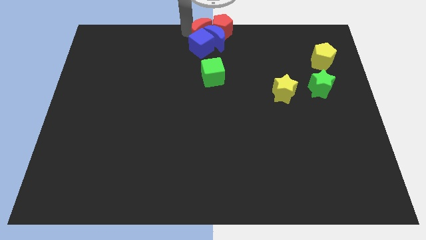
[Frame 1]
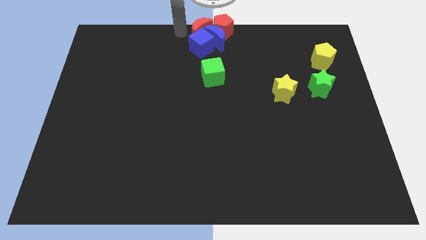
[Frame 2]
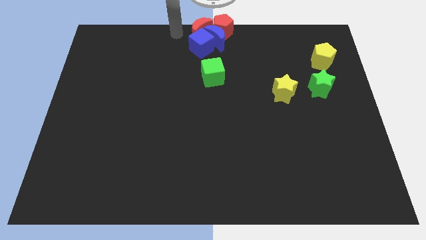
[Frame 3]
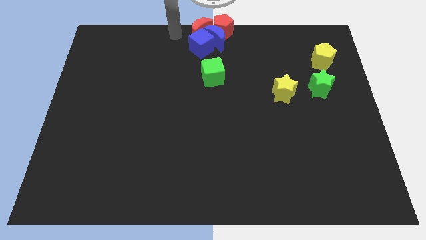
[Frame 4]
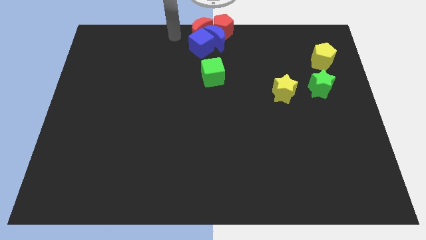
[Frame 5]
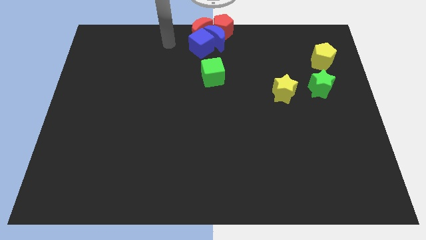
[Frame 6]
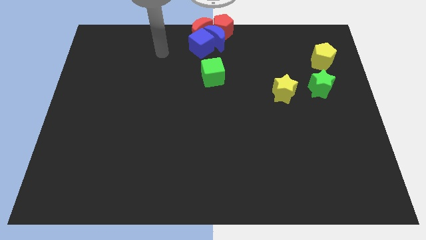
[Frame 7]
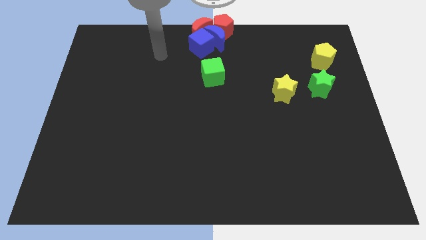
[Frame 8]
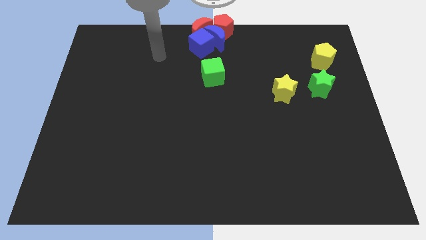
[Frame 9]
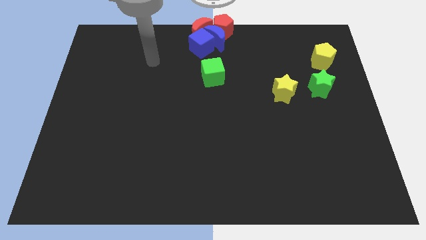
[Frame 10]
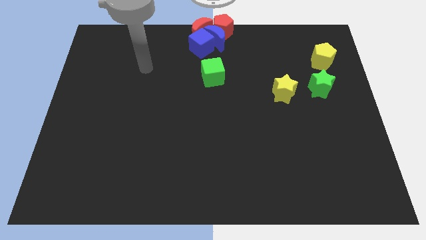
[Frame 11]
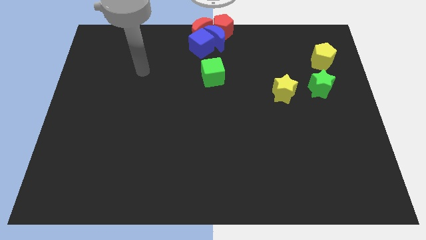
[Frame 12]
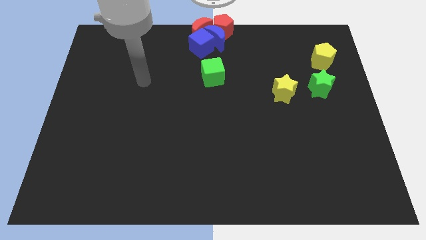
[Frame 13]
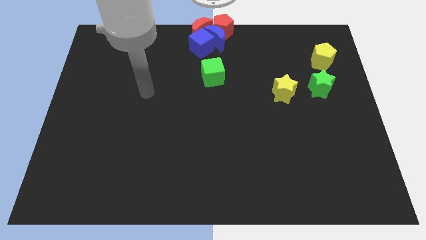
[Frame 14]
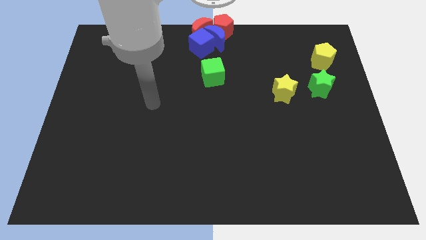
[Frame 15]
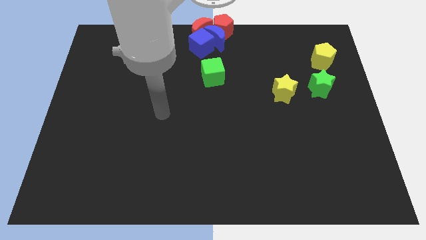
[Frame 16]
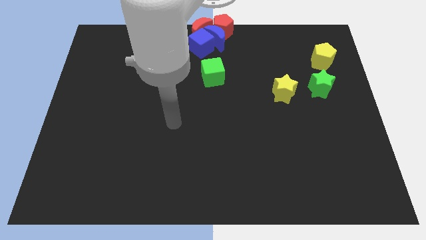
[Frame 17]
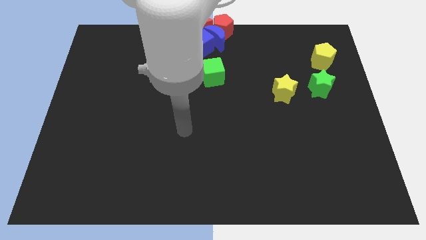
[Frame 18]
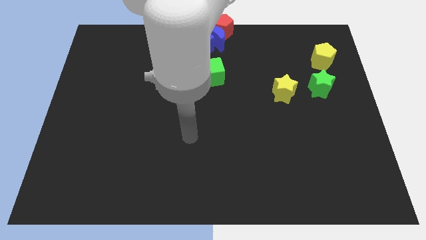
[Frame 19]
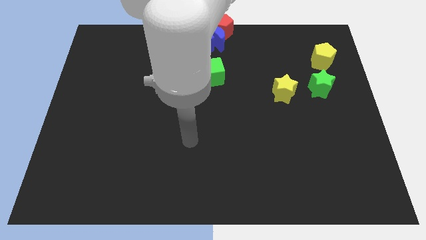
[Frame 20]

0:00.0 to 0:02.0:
move your arm to the center of the board

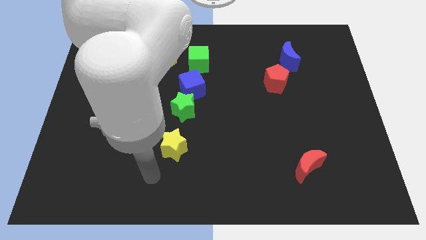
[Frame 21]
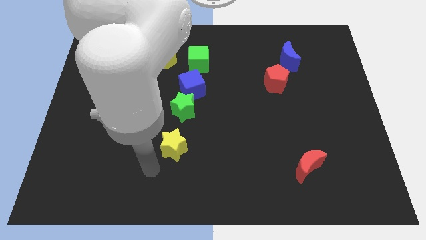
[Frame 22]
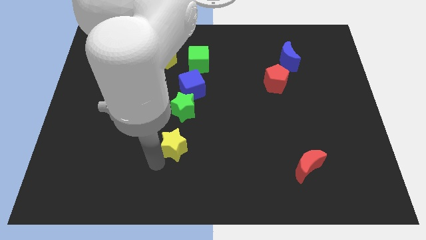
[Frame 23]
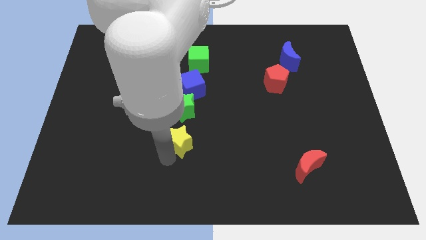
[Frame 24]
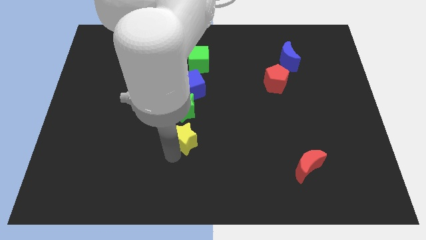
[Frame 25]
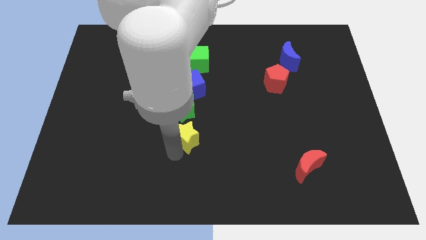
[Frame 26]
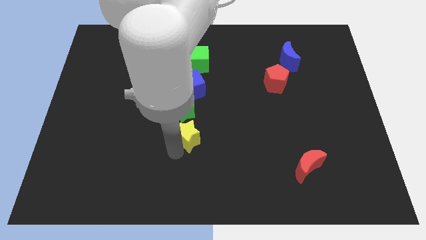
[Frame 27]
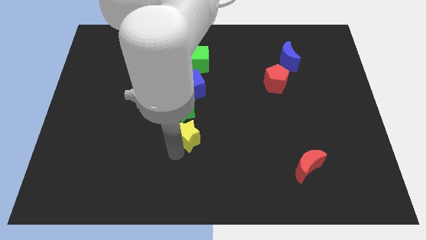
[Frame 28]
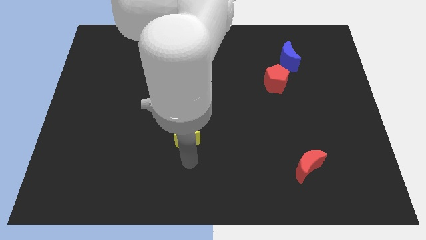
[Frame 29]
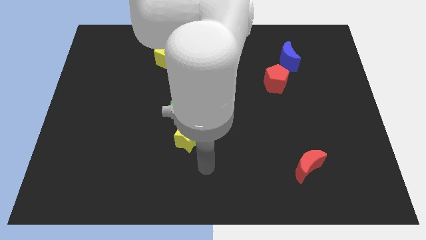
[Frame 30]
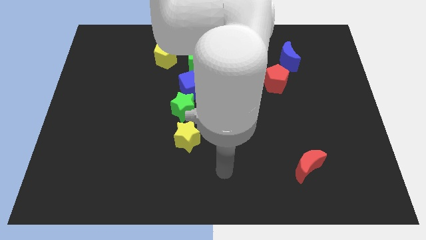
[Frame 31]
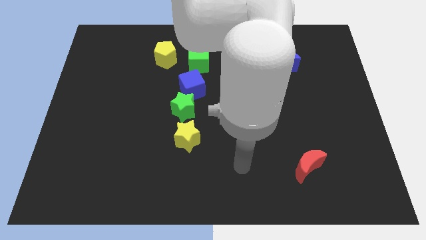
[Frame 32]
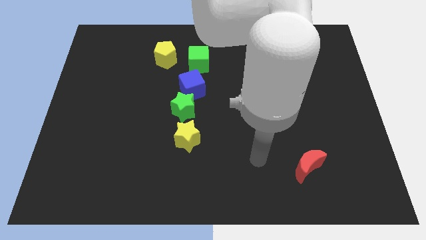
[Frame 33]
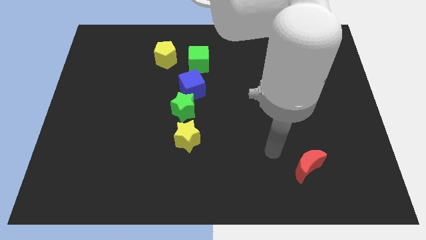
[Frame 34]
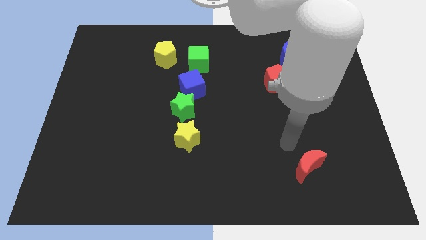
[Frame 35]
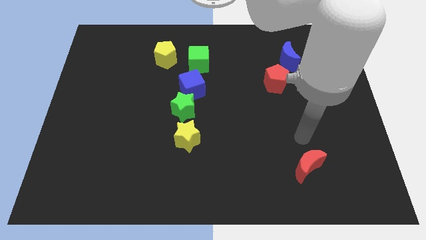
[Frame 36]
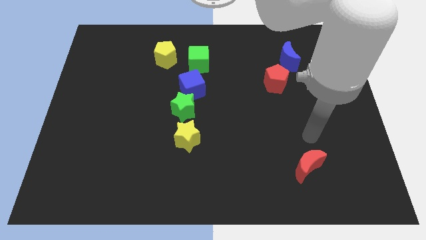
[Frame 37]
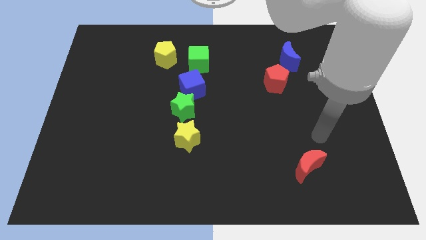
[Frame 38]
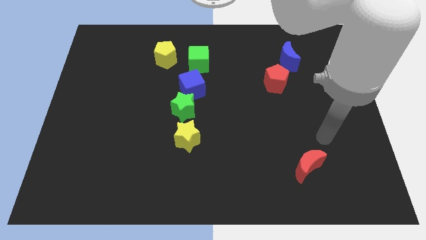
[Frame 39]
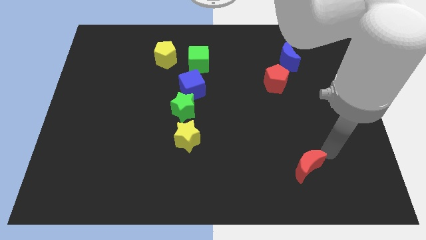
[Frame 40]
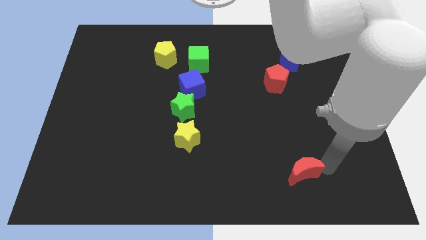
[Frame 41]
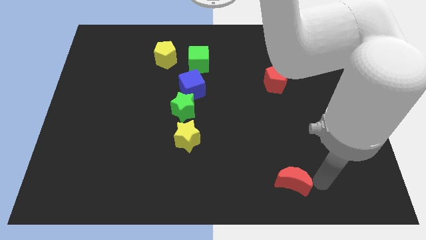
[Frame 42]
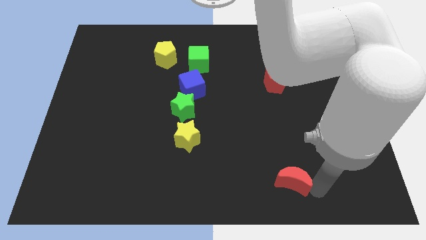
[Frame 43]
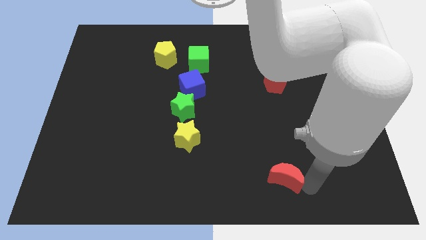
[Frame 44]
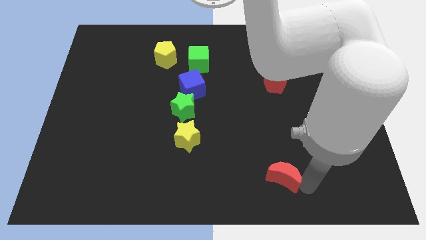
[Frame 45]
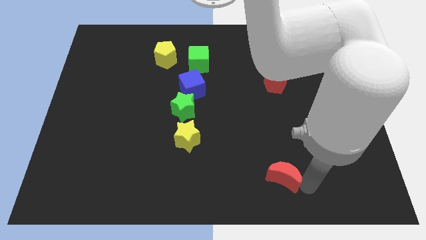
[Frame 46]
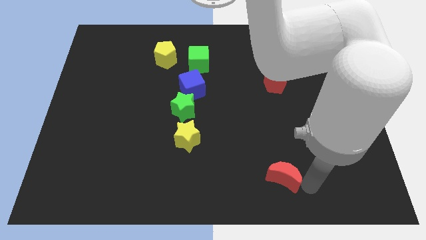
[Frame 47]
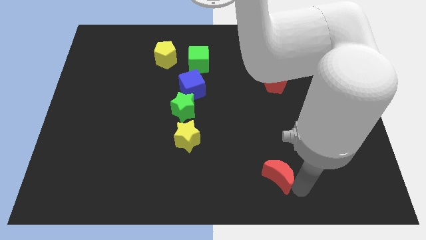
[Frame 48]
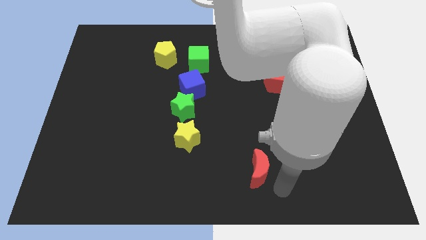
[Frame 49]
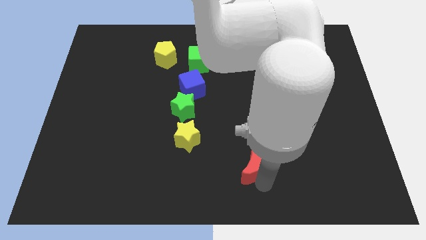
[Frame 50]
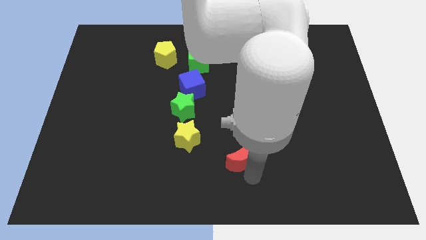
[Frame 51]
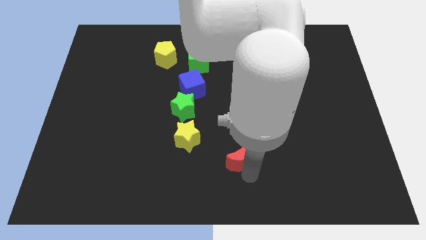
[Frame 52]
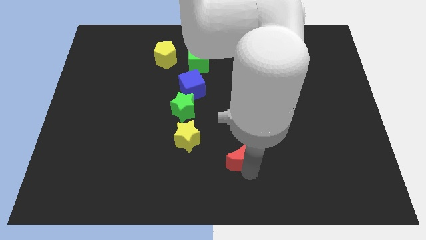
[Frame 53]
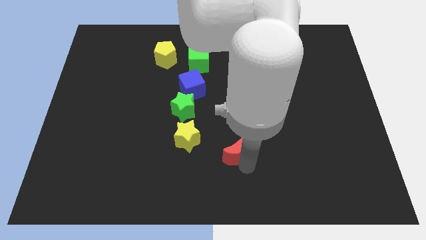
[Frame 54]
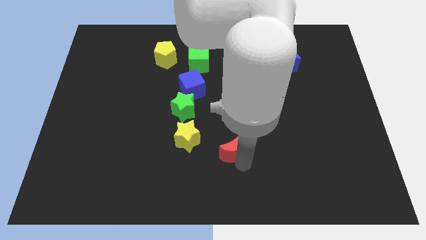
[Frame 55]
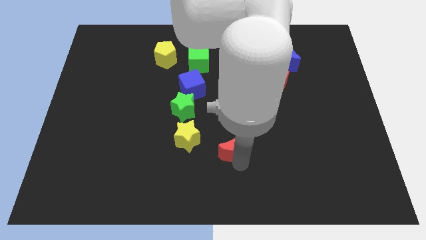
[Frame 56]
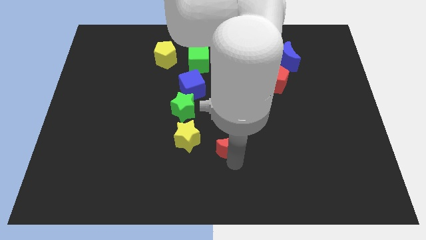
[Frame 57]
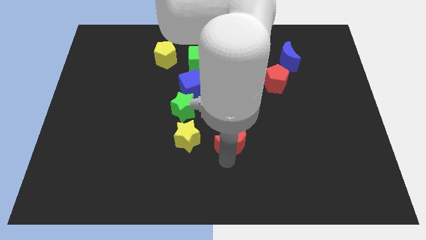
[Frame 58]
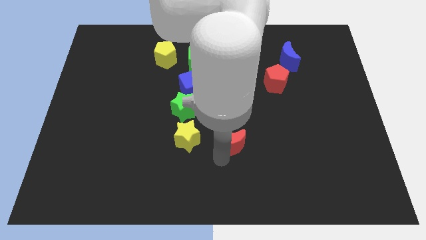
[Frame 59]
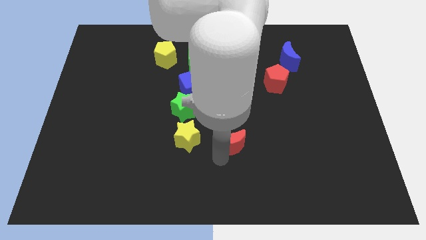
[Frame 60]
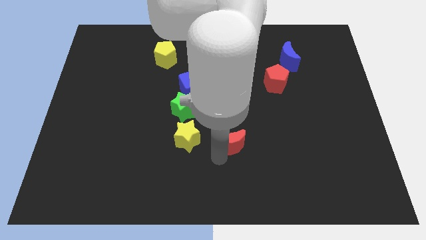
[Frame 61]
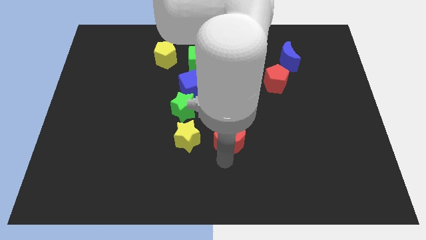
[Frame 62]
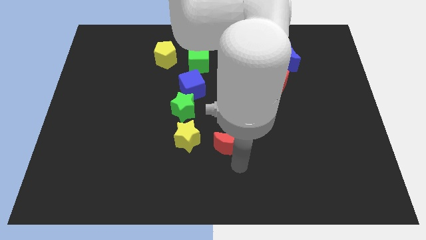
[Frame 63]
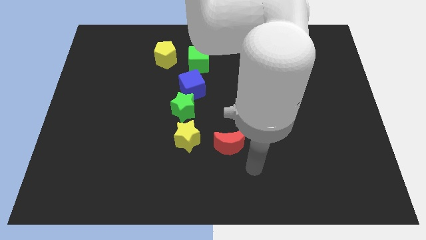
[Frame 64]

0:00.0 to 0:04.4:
place the red moon to the right of the yellow star

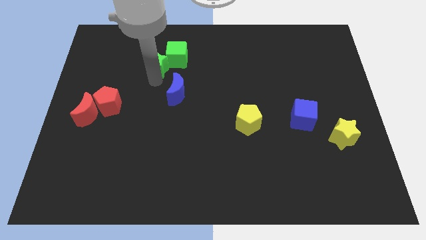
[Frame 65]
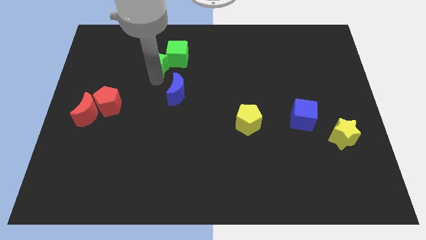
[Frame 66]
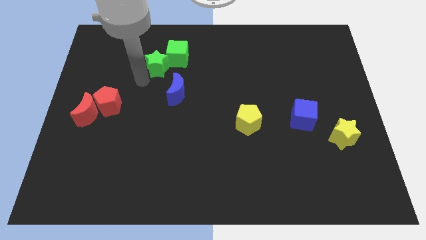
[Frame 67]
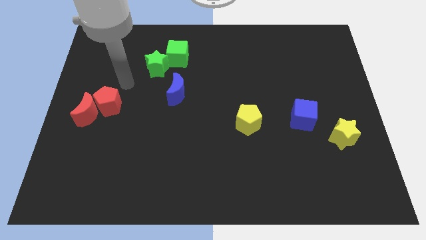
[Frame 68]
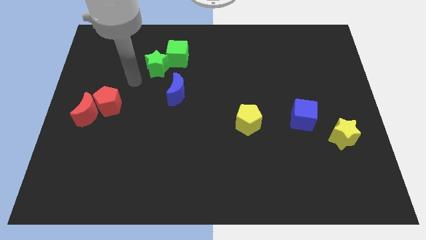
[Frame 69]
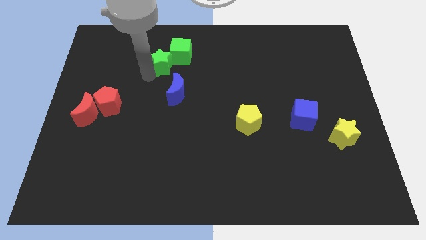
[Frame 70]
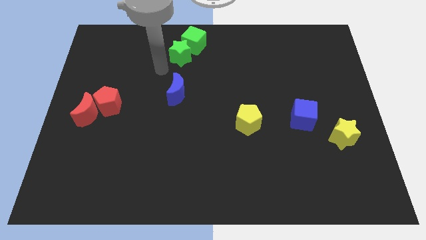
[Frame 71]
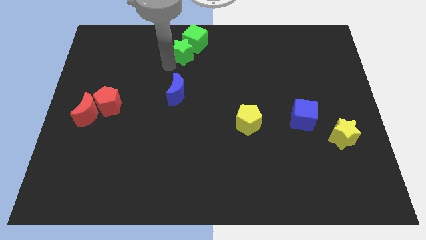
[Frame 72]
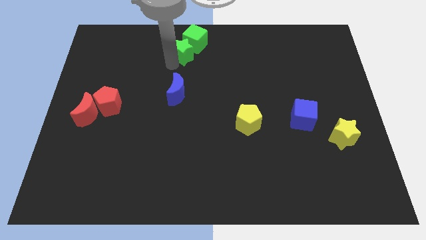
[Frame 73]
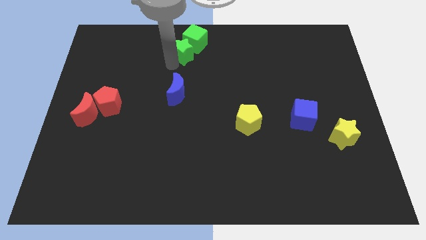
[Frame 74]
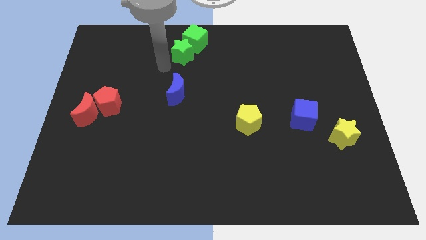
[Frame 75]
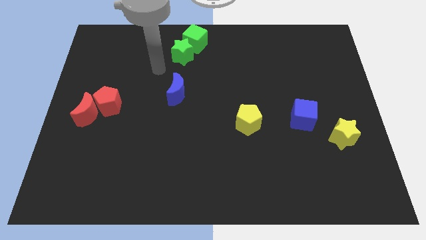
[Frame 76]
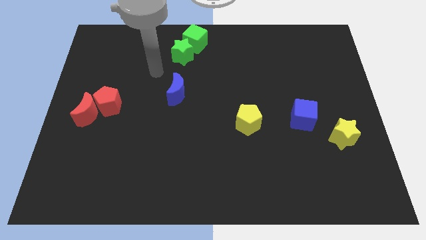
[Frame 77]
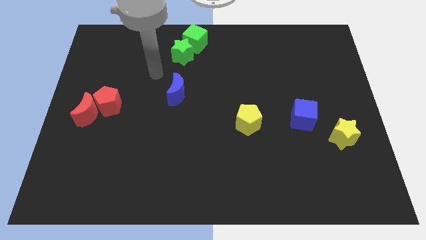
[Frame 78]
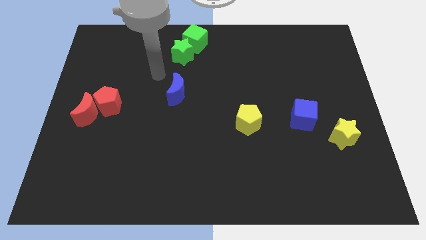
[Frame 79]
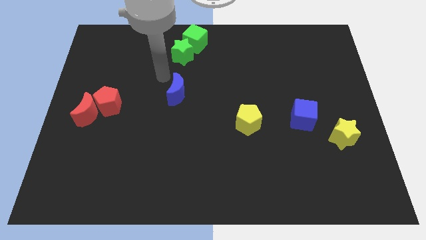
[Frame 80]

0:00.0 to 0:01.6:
push the green blocks slightly to the top

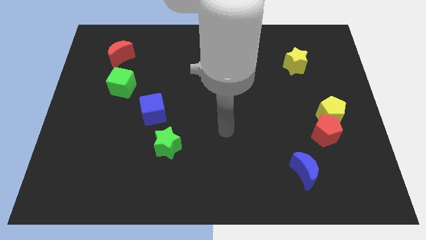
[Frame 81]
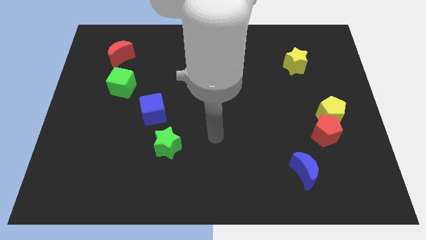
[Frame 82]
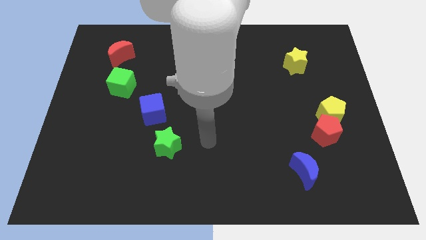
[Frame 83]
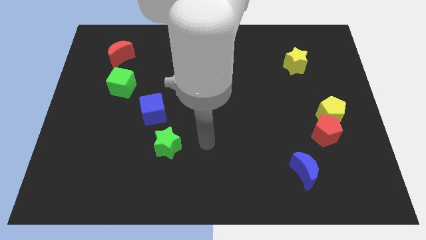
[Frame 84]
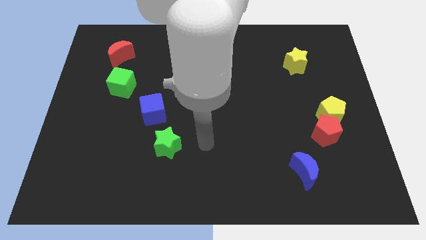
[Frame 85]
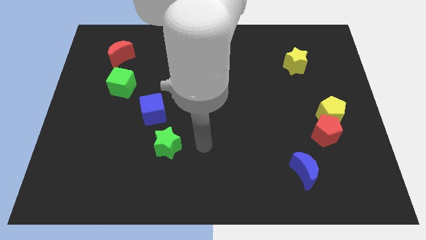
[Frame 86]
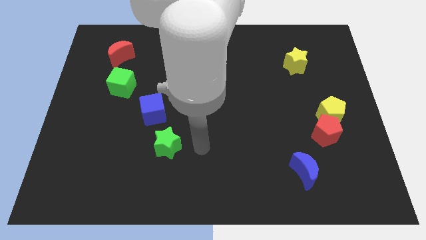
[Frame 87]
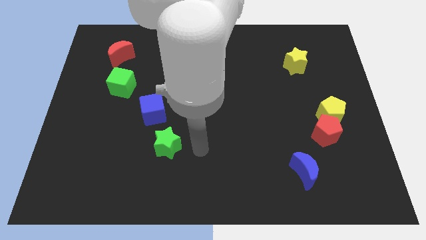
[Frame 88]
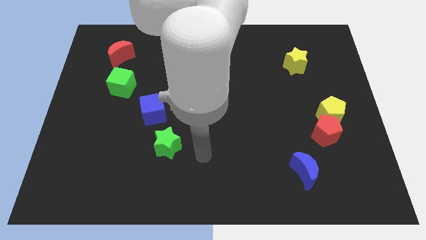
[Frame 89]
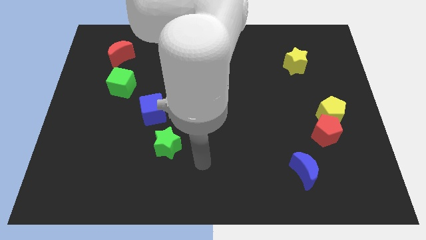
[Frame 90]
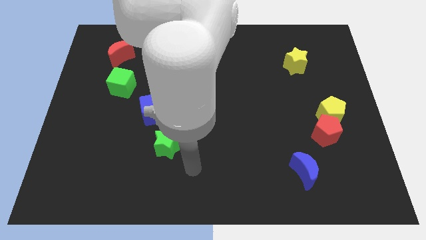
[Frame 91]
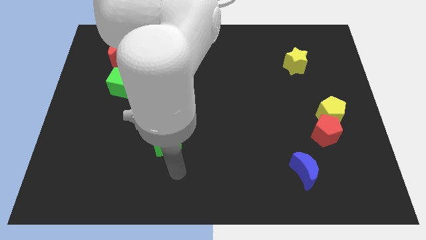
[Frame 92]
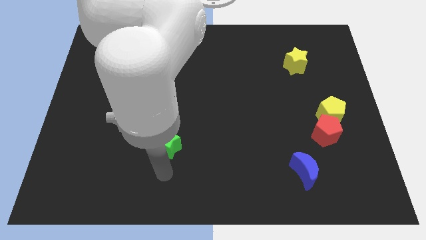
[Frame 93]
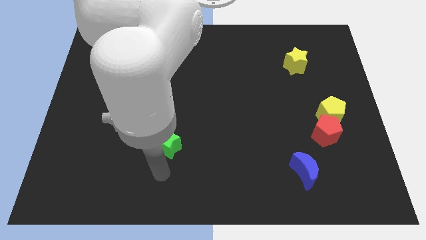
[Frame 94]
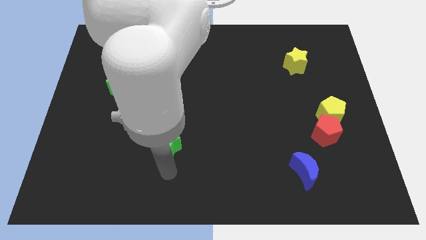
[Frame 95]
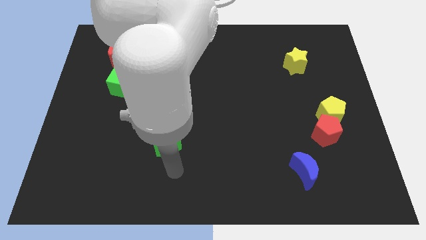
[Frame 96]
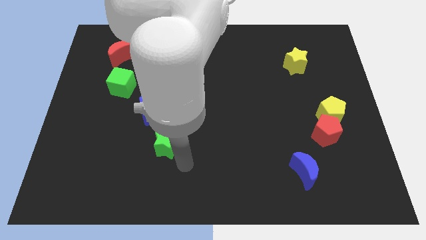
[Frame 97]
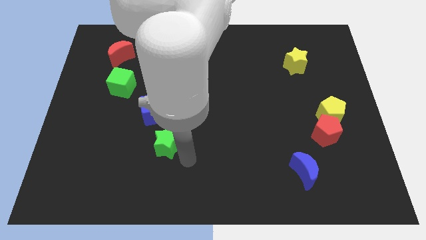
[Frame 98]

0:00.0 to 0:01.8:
place the arm diagonal to the green star
